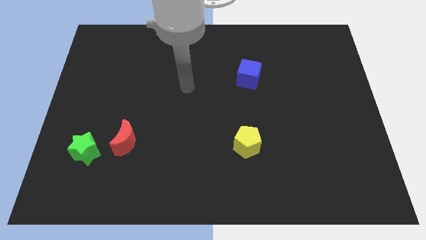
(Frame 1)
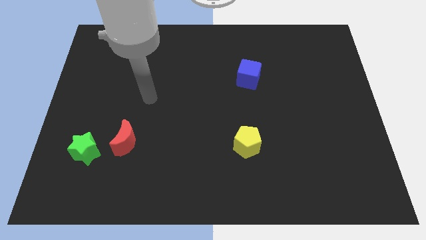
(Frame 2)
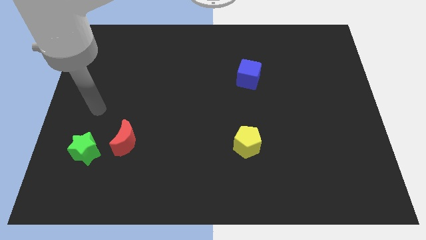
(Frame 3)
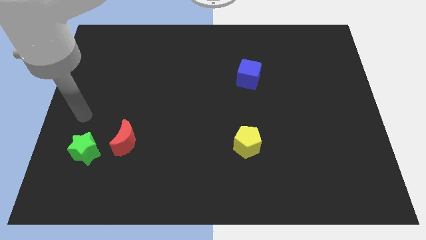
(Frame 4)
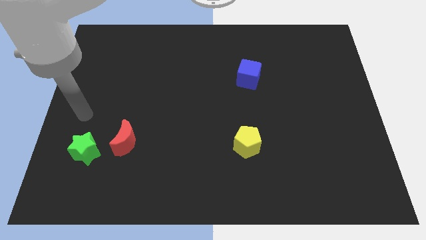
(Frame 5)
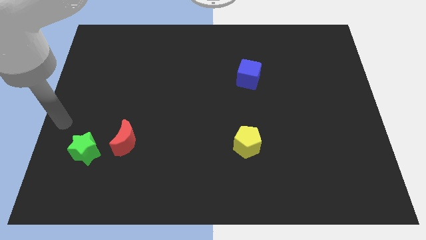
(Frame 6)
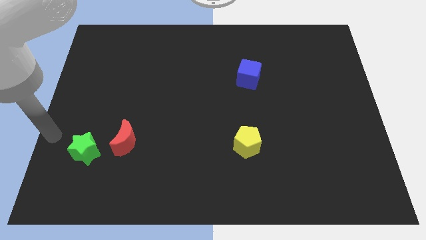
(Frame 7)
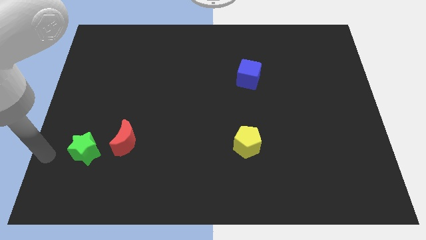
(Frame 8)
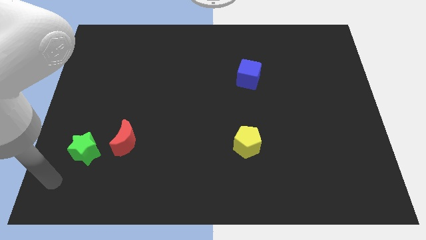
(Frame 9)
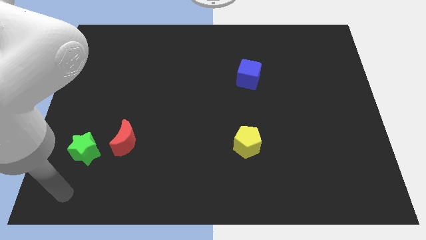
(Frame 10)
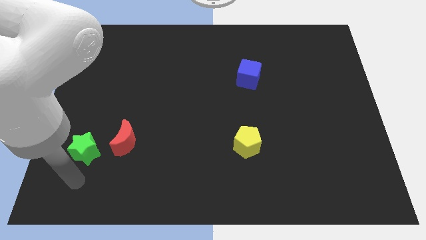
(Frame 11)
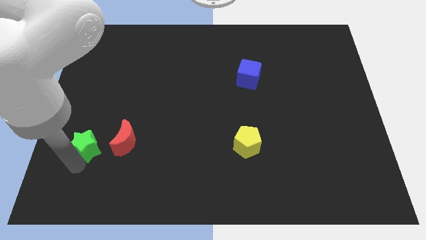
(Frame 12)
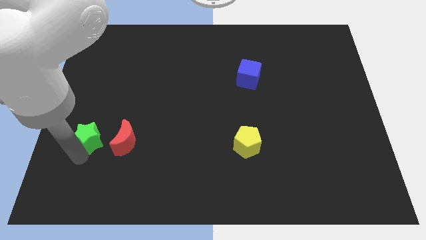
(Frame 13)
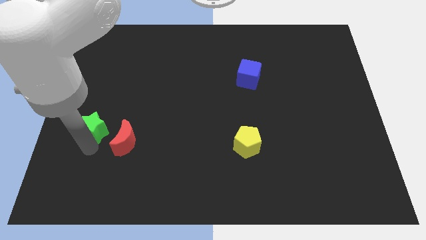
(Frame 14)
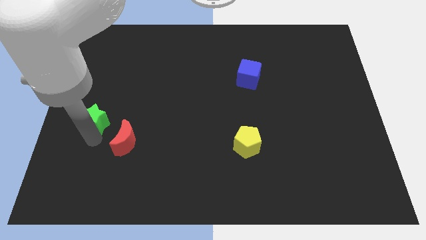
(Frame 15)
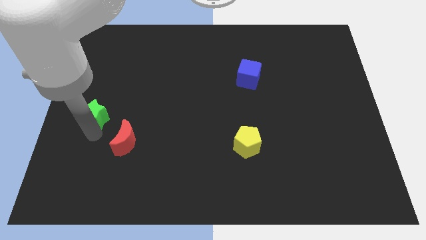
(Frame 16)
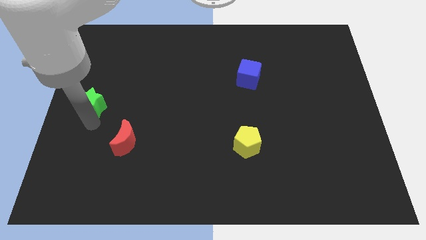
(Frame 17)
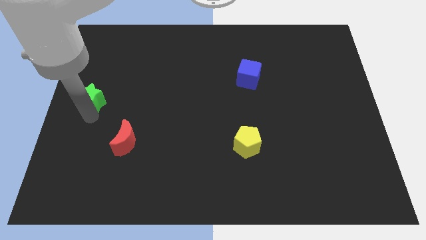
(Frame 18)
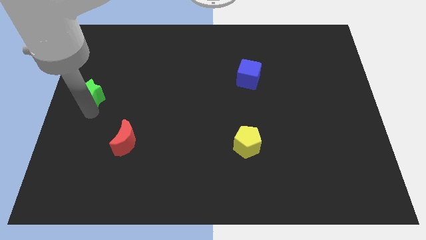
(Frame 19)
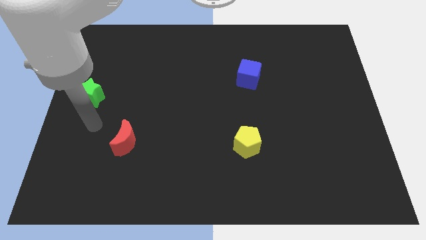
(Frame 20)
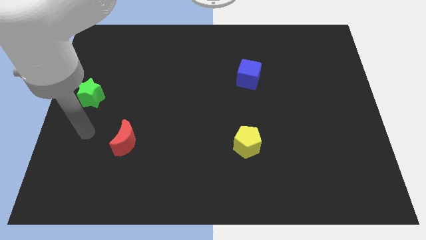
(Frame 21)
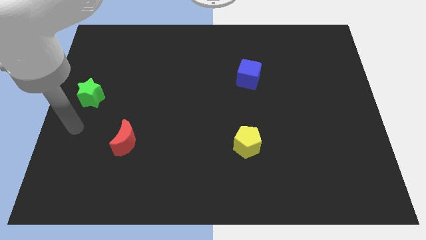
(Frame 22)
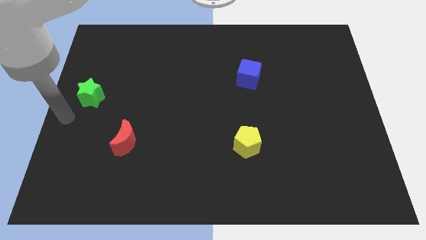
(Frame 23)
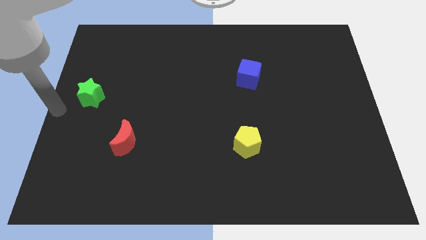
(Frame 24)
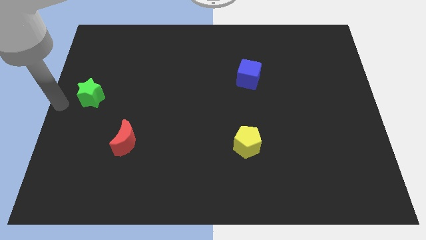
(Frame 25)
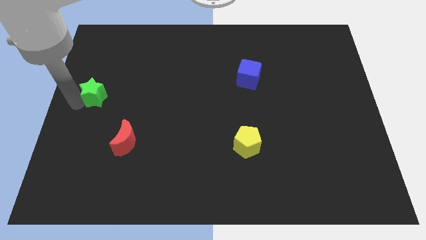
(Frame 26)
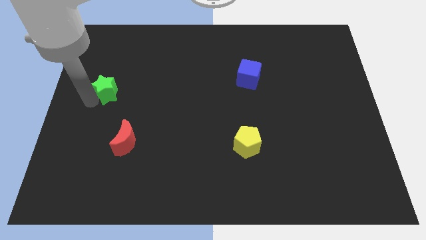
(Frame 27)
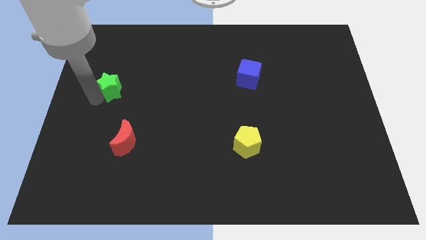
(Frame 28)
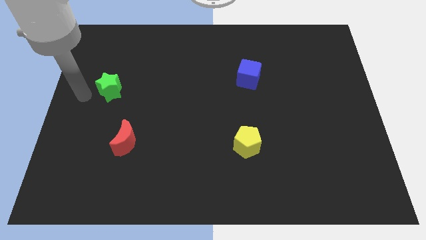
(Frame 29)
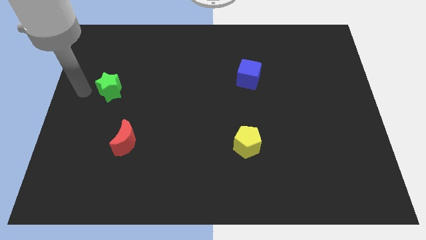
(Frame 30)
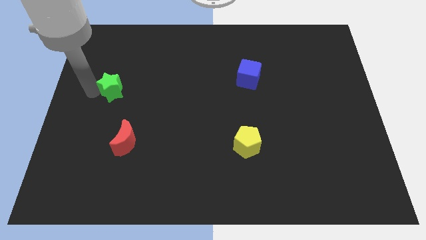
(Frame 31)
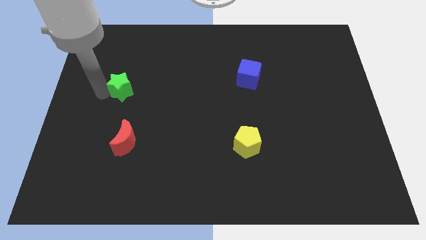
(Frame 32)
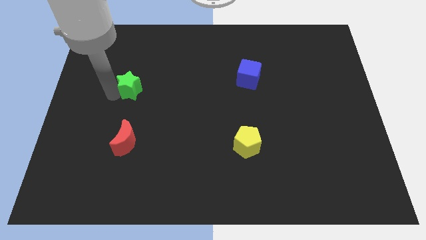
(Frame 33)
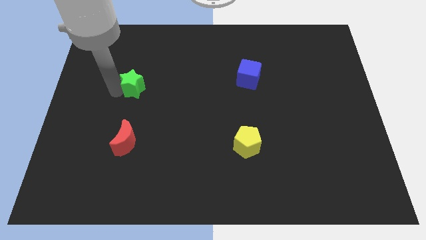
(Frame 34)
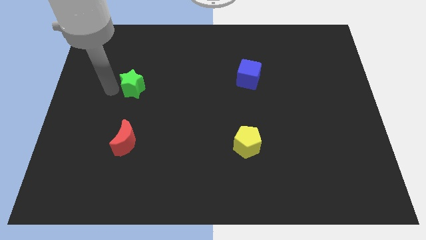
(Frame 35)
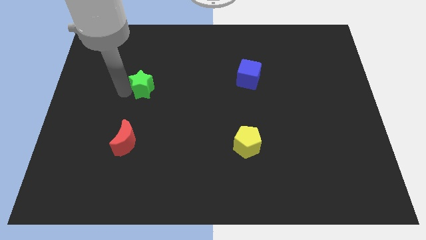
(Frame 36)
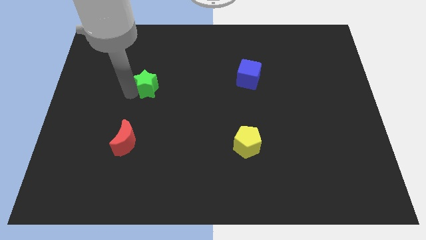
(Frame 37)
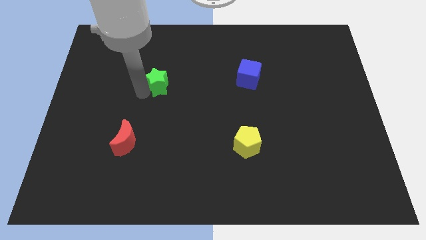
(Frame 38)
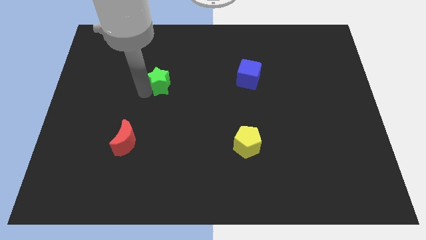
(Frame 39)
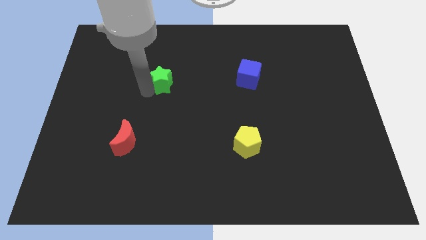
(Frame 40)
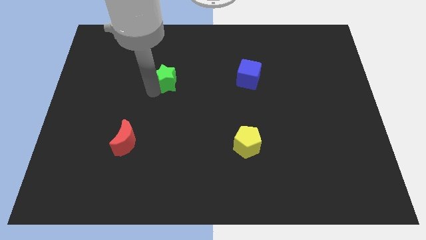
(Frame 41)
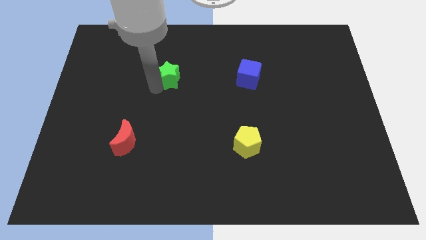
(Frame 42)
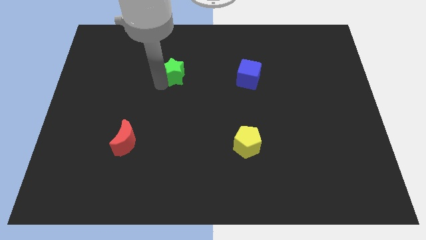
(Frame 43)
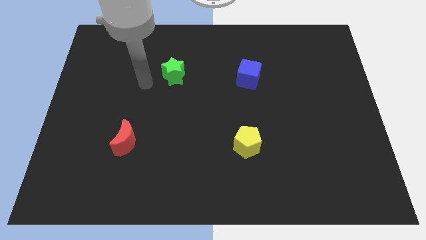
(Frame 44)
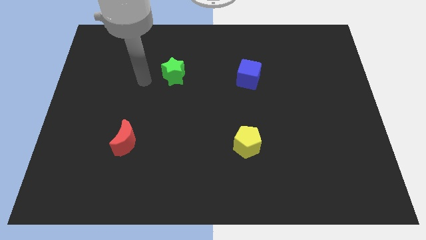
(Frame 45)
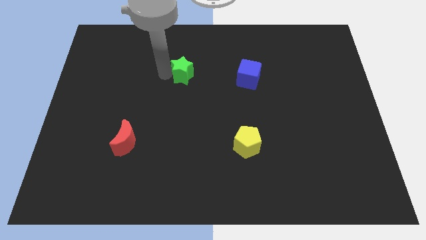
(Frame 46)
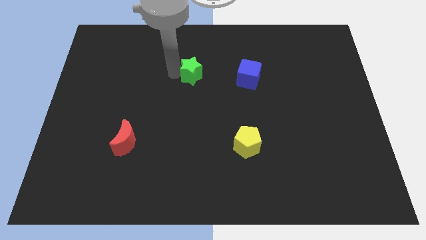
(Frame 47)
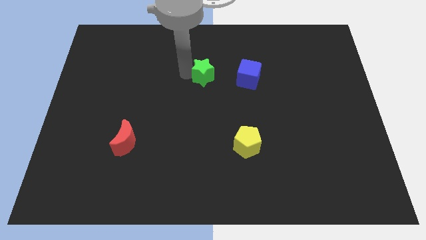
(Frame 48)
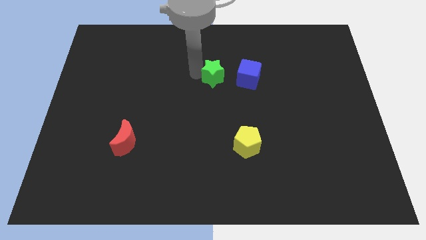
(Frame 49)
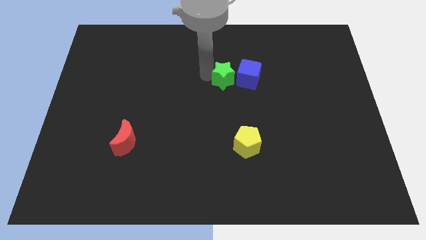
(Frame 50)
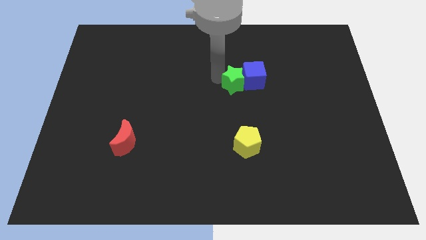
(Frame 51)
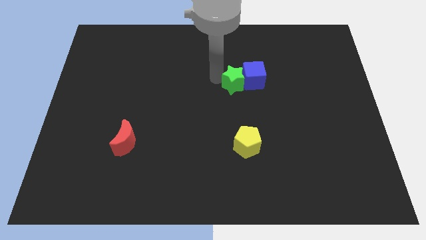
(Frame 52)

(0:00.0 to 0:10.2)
slide the star close to the blue cube

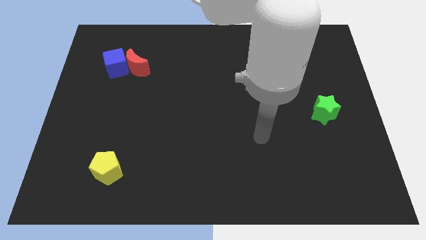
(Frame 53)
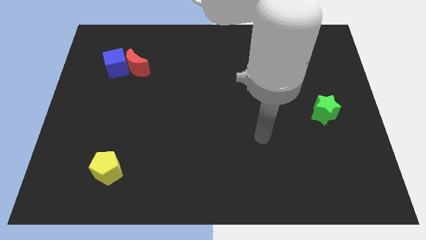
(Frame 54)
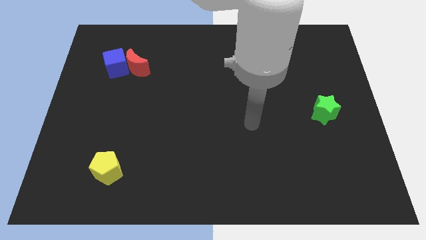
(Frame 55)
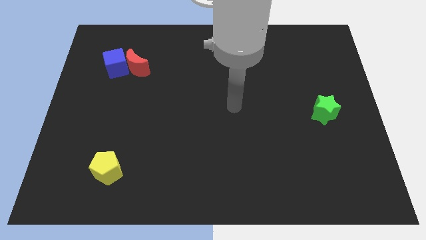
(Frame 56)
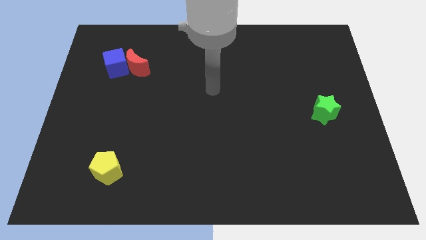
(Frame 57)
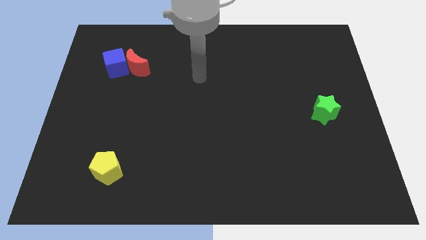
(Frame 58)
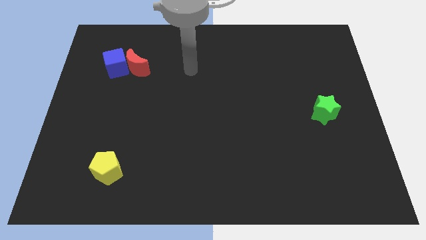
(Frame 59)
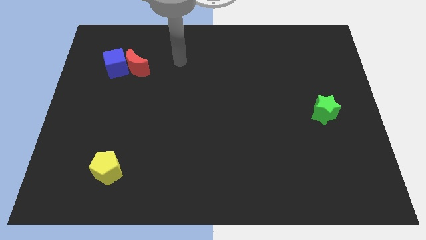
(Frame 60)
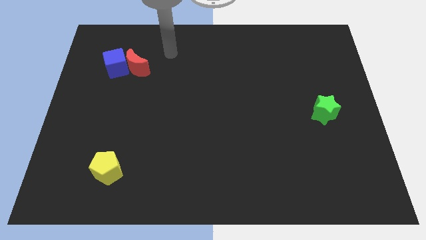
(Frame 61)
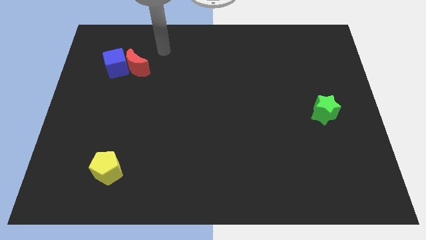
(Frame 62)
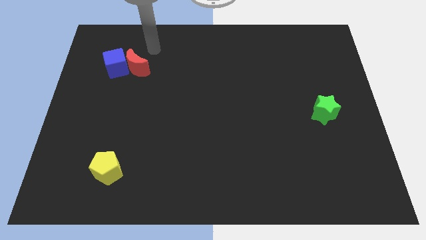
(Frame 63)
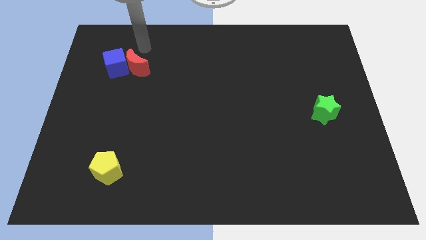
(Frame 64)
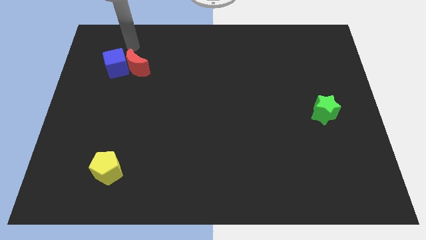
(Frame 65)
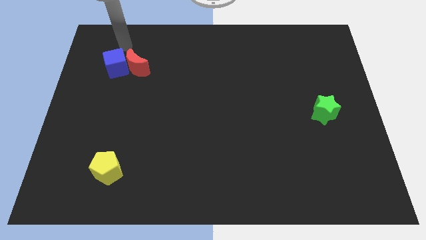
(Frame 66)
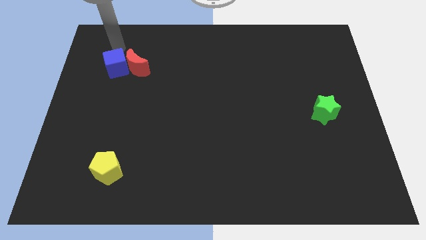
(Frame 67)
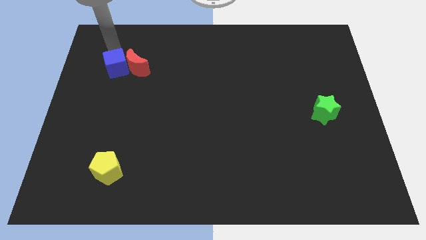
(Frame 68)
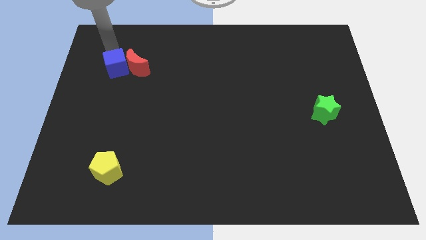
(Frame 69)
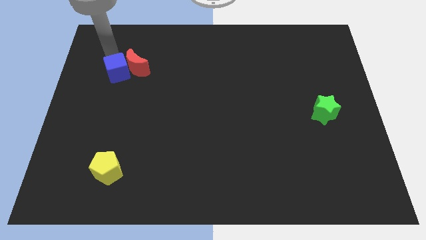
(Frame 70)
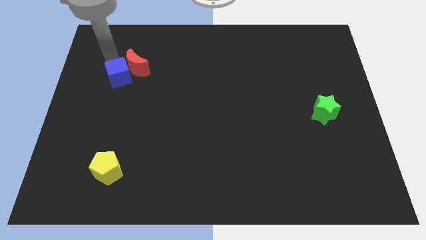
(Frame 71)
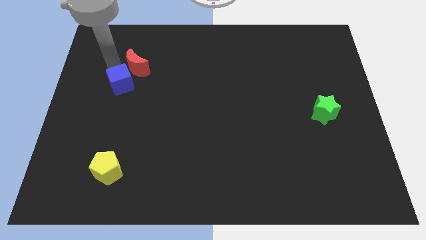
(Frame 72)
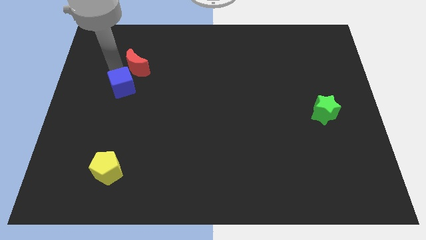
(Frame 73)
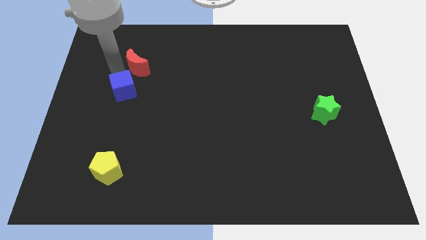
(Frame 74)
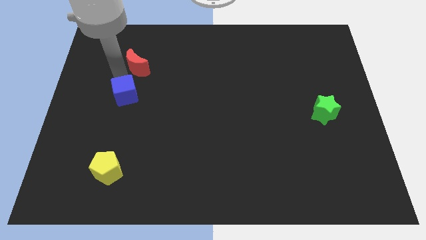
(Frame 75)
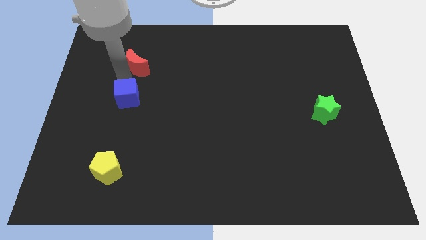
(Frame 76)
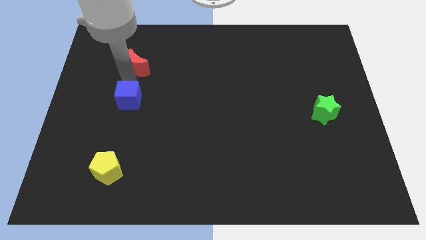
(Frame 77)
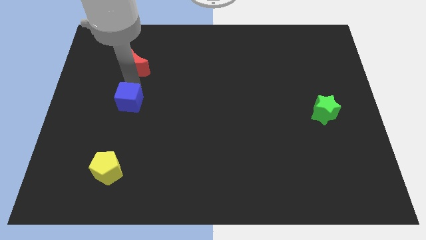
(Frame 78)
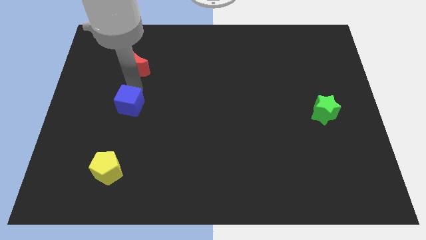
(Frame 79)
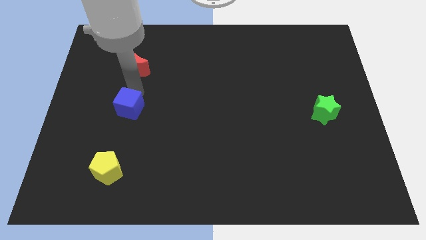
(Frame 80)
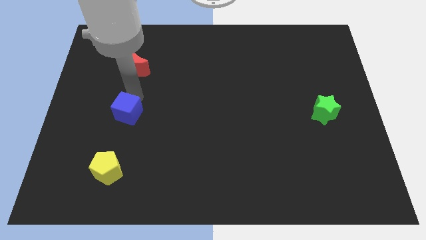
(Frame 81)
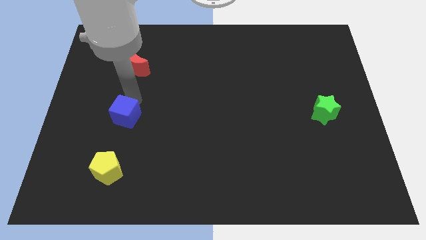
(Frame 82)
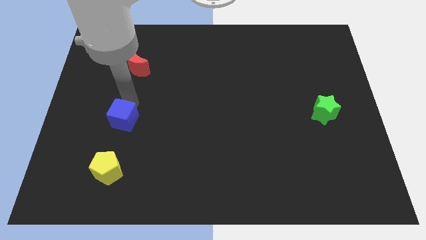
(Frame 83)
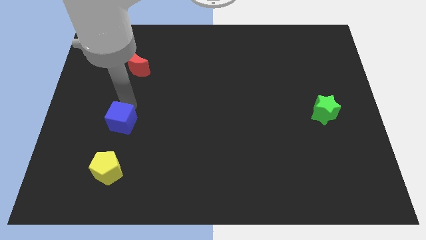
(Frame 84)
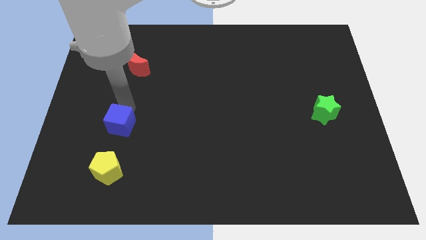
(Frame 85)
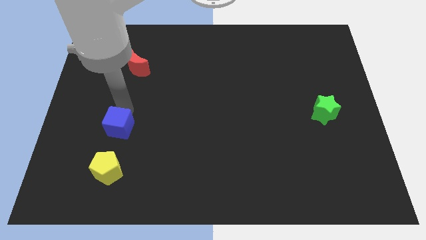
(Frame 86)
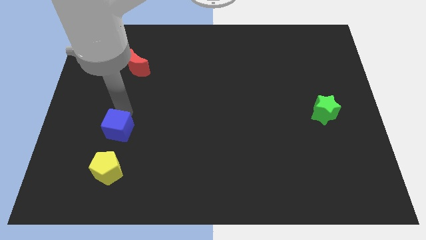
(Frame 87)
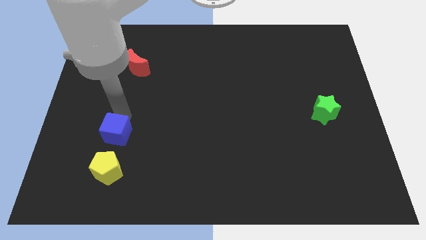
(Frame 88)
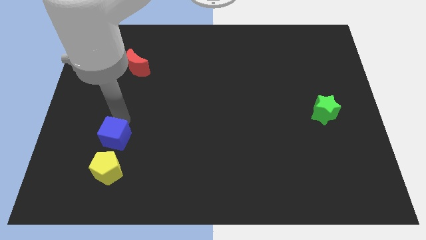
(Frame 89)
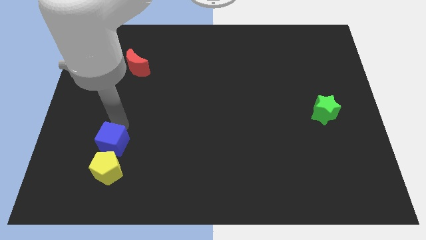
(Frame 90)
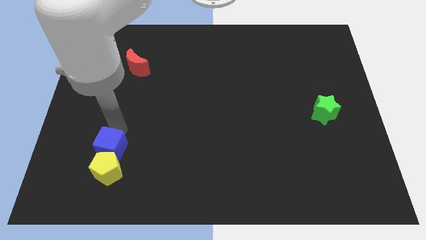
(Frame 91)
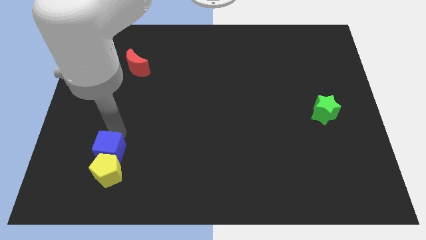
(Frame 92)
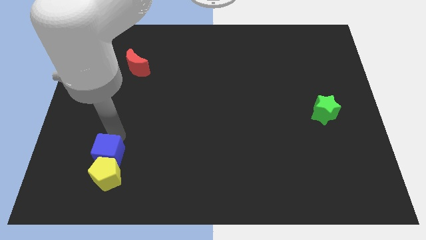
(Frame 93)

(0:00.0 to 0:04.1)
slide the blue block to the yellow block
